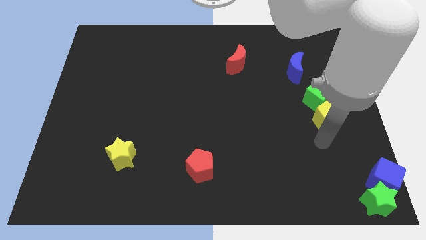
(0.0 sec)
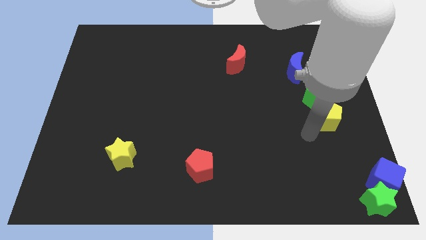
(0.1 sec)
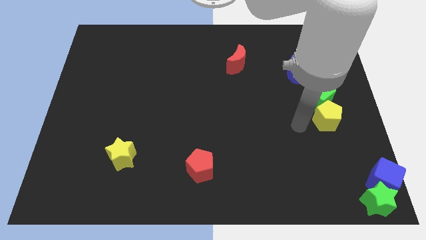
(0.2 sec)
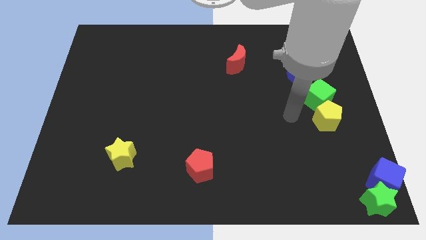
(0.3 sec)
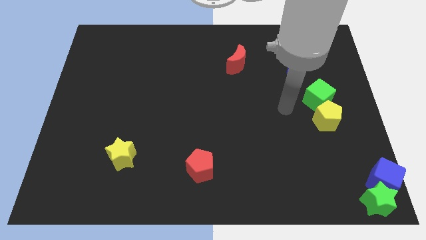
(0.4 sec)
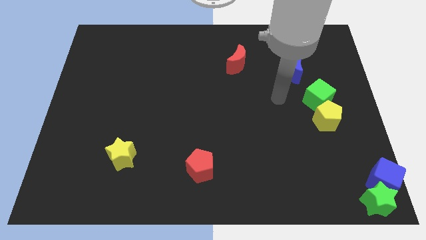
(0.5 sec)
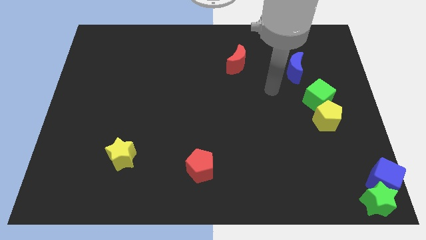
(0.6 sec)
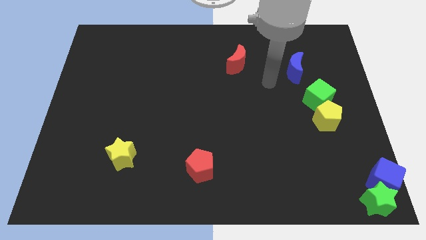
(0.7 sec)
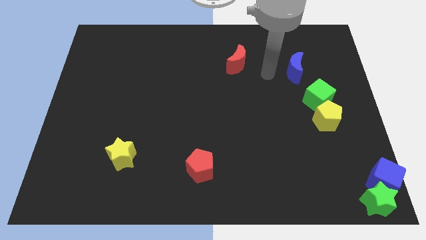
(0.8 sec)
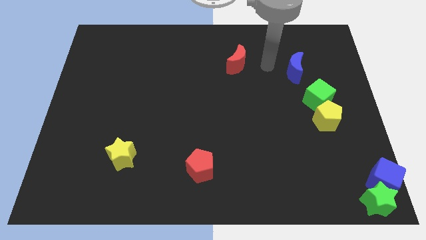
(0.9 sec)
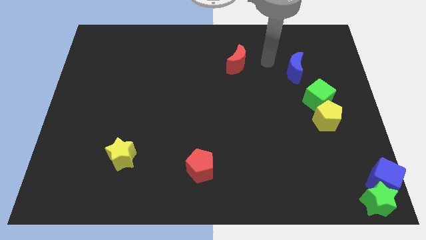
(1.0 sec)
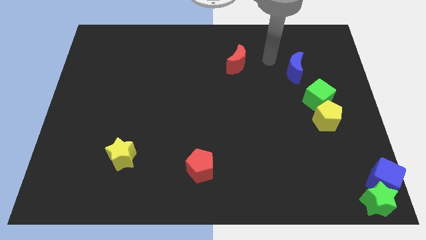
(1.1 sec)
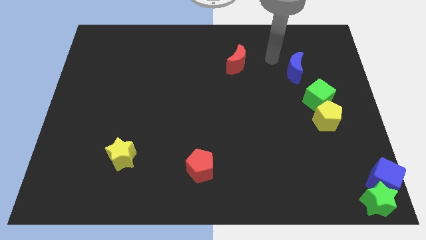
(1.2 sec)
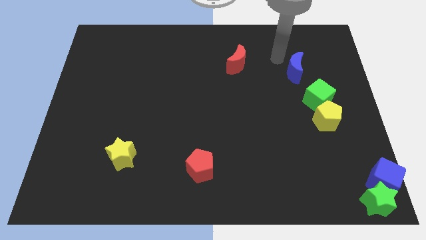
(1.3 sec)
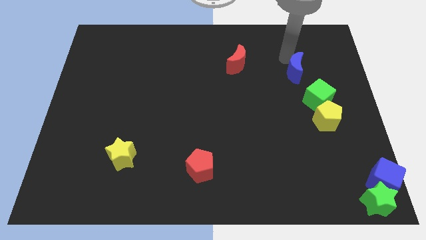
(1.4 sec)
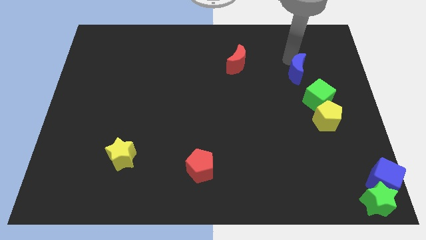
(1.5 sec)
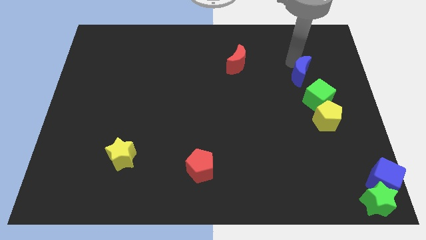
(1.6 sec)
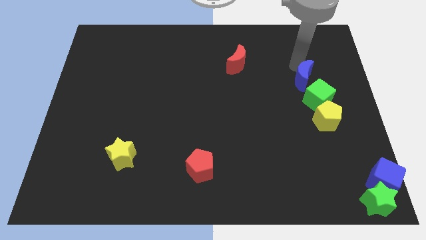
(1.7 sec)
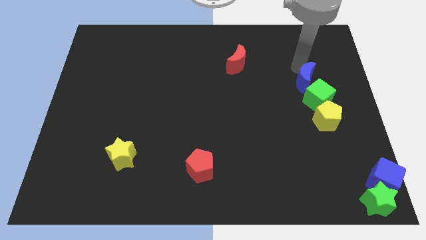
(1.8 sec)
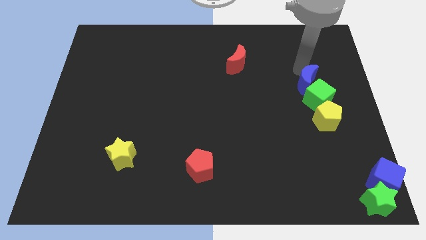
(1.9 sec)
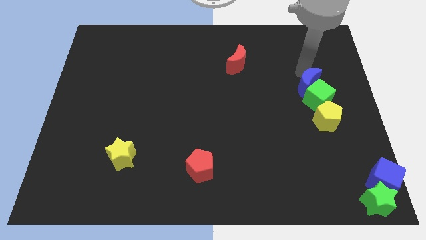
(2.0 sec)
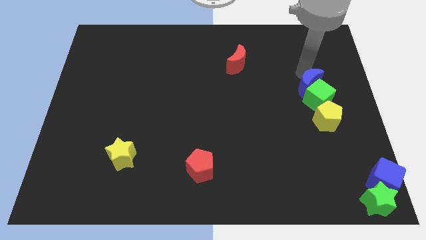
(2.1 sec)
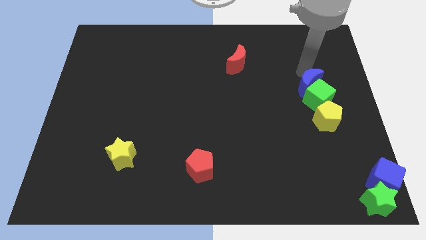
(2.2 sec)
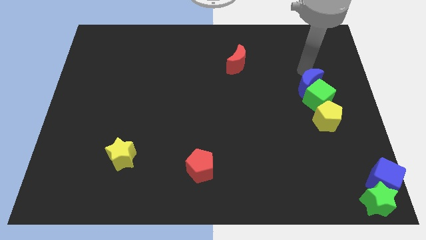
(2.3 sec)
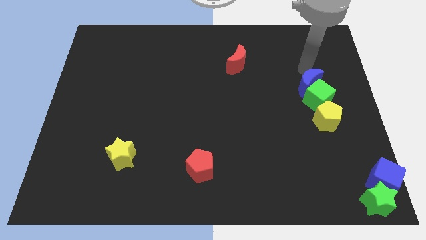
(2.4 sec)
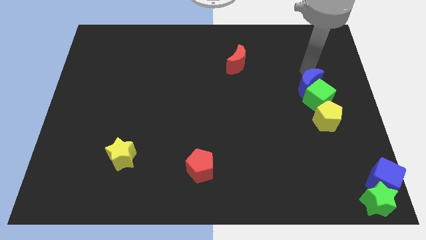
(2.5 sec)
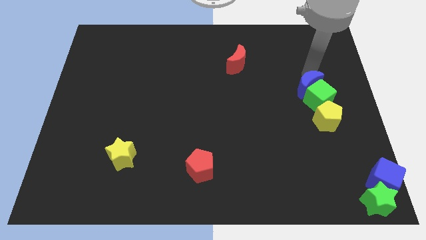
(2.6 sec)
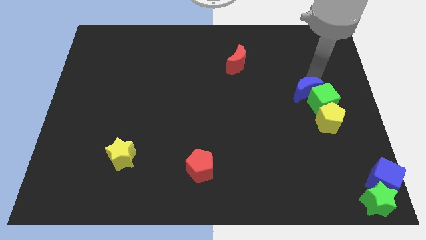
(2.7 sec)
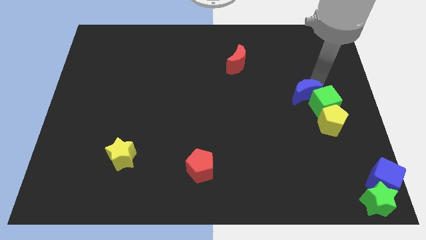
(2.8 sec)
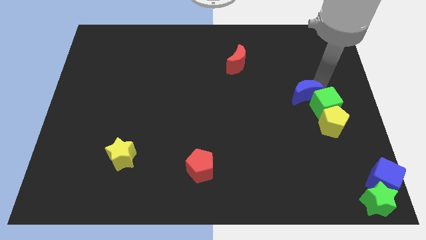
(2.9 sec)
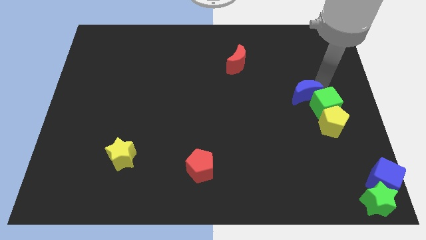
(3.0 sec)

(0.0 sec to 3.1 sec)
push blue moon into green cube

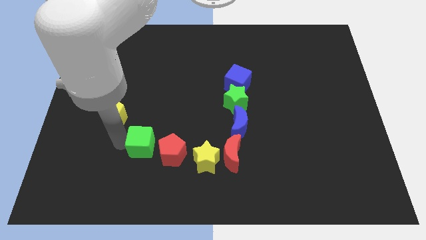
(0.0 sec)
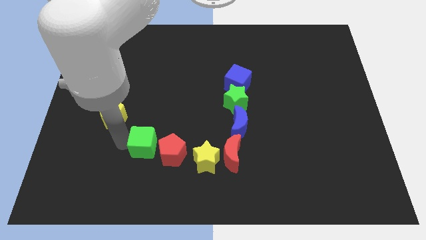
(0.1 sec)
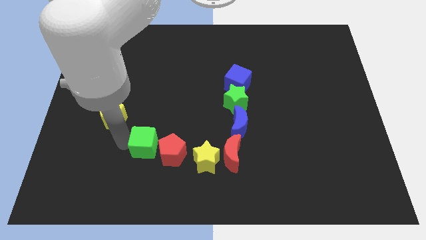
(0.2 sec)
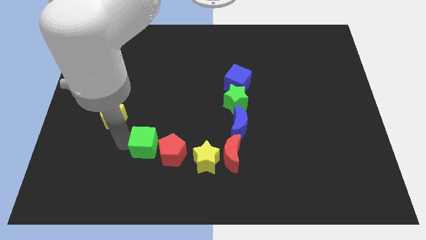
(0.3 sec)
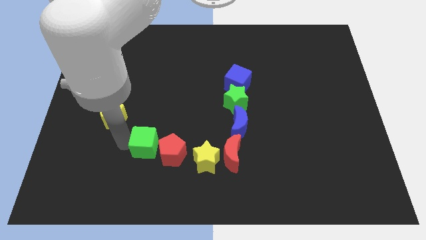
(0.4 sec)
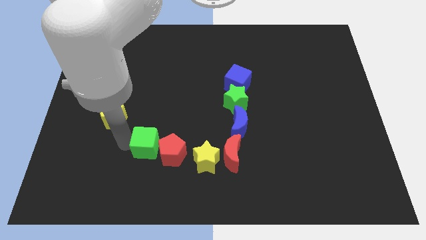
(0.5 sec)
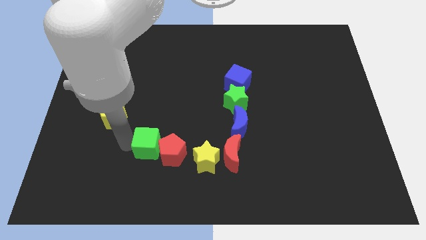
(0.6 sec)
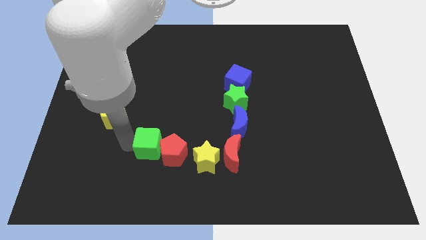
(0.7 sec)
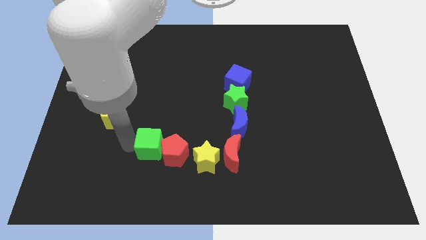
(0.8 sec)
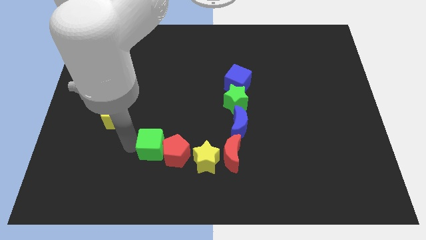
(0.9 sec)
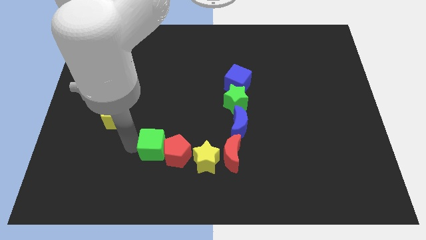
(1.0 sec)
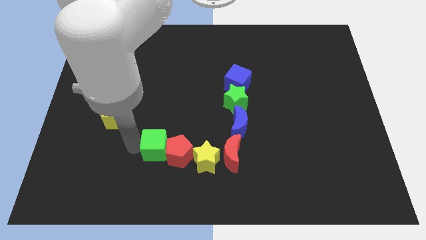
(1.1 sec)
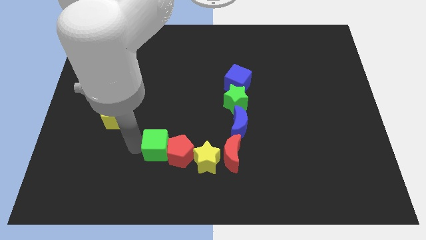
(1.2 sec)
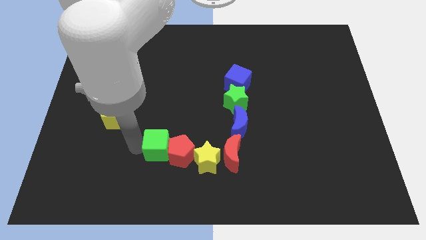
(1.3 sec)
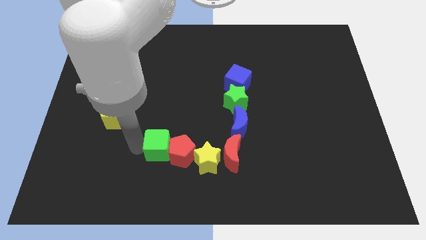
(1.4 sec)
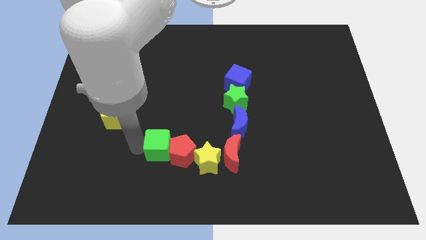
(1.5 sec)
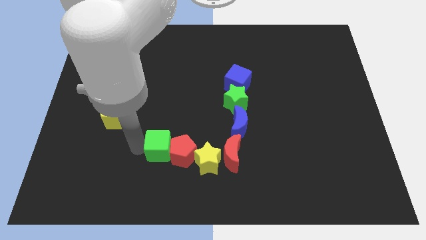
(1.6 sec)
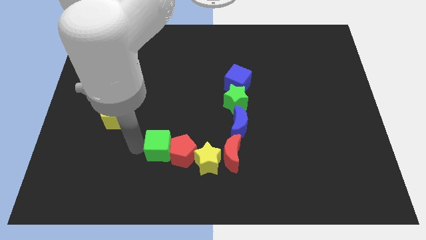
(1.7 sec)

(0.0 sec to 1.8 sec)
move the green cube into the red pentagon

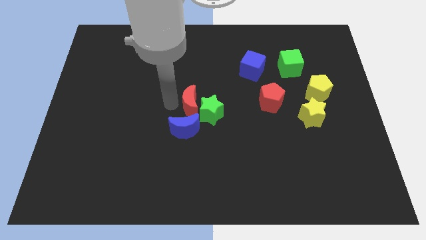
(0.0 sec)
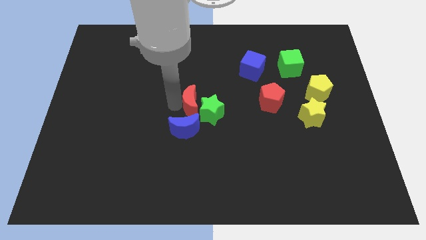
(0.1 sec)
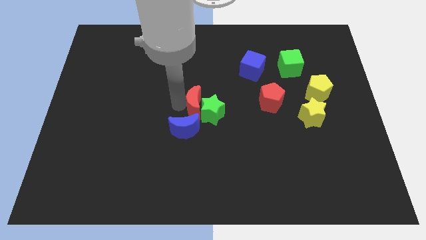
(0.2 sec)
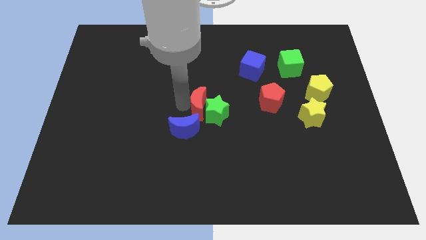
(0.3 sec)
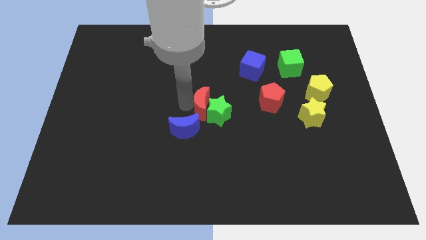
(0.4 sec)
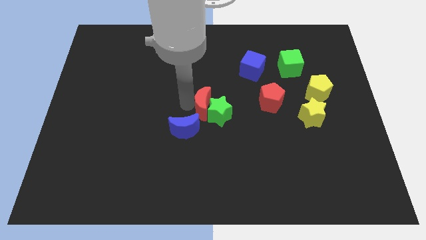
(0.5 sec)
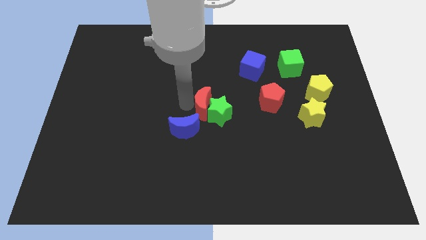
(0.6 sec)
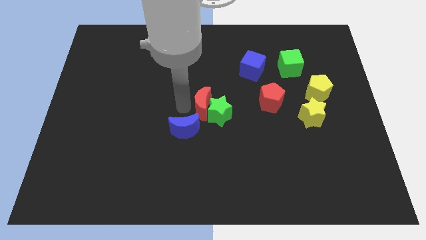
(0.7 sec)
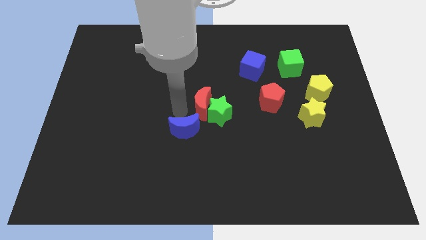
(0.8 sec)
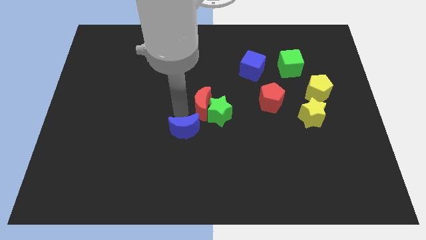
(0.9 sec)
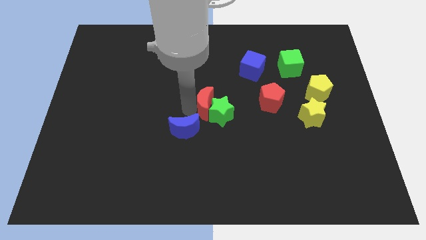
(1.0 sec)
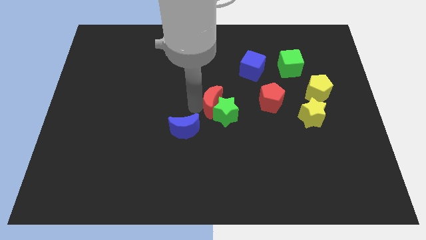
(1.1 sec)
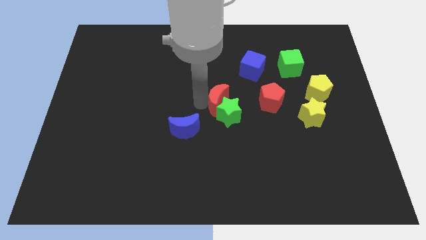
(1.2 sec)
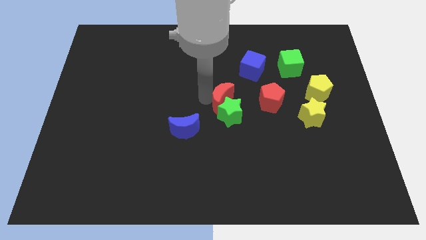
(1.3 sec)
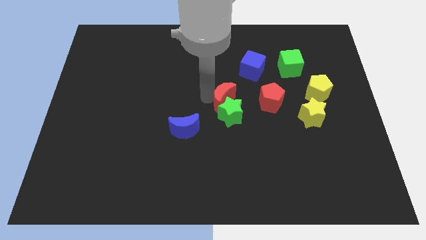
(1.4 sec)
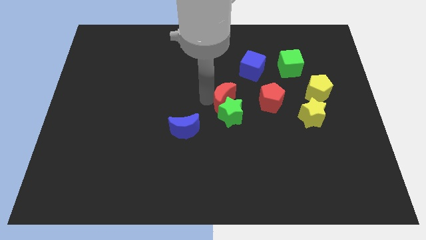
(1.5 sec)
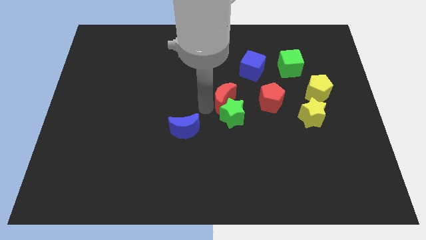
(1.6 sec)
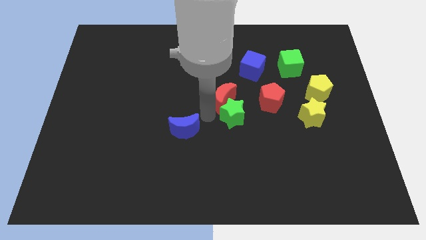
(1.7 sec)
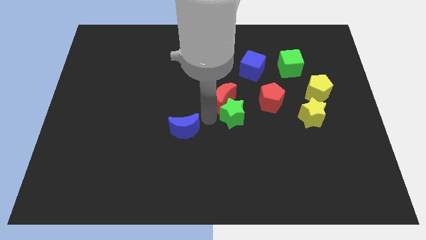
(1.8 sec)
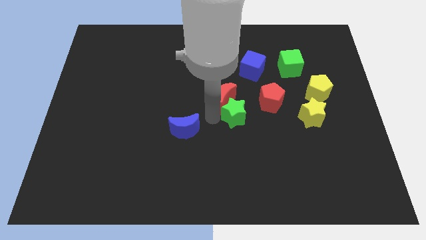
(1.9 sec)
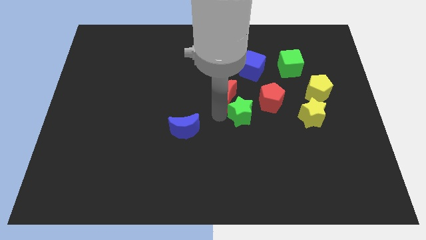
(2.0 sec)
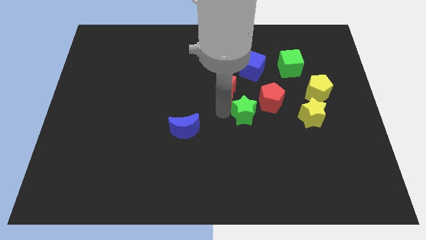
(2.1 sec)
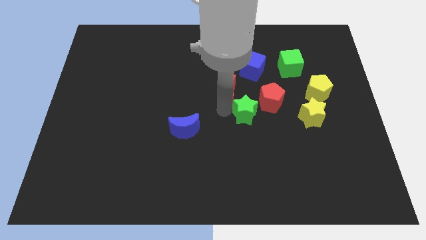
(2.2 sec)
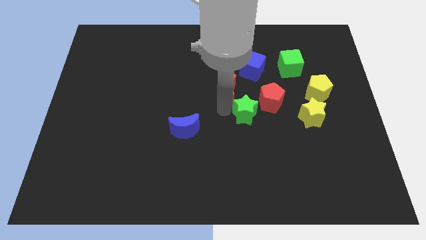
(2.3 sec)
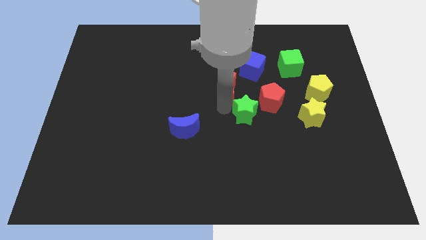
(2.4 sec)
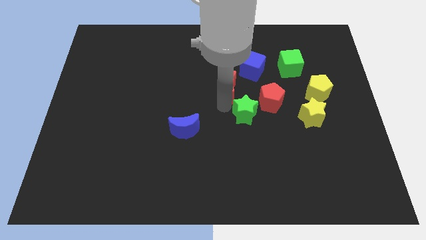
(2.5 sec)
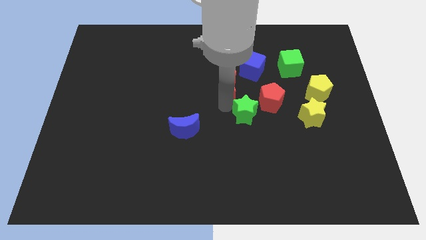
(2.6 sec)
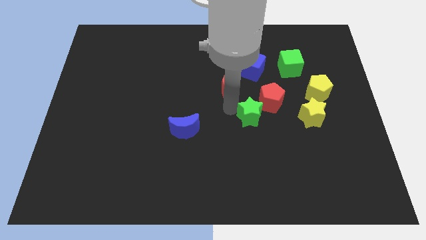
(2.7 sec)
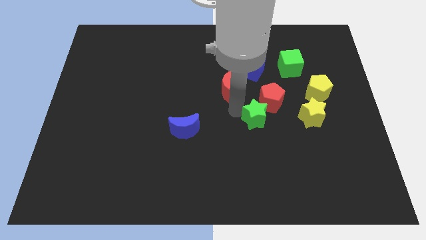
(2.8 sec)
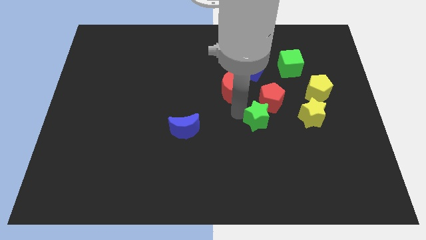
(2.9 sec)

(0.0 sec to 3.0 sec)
push green star below red pentagon

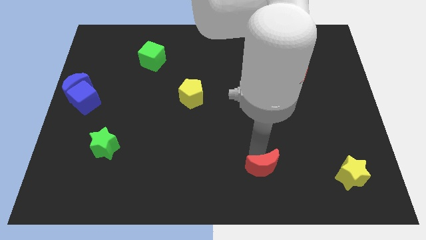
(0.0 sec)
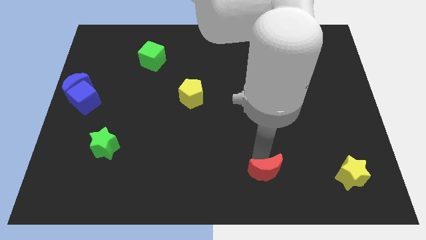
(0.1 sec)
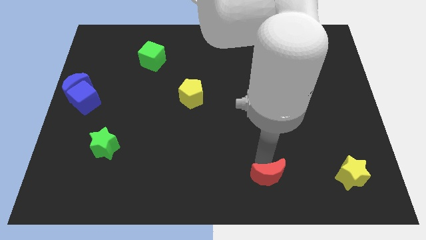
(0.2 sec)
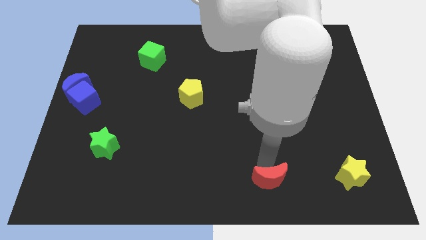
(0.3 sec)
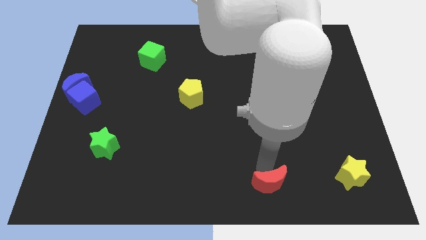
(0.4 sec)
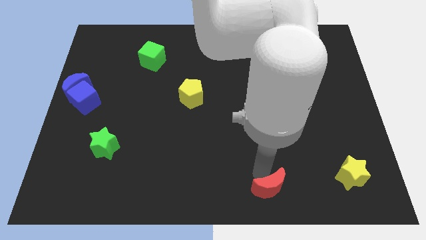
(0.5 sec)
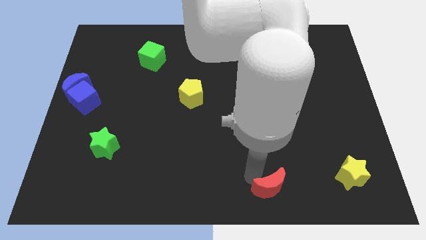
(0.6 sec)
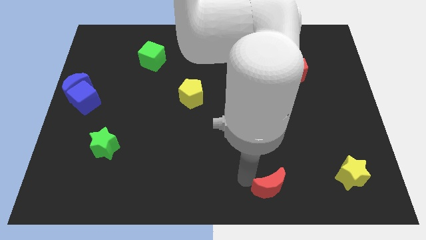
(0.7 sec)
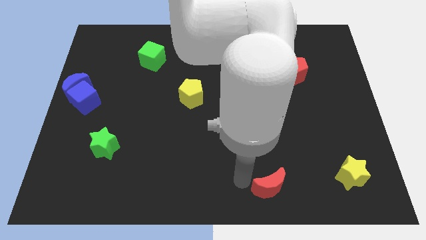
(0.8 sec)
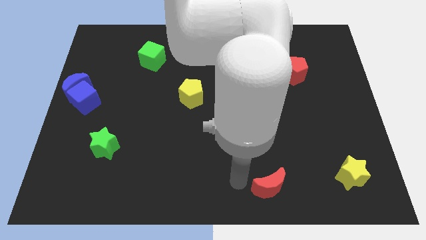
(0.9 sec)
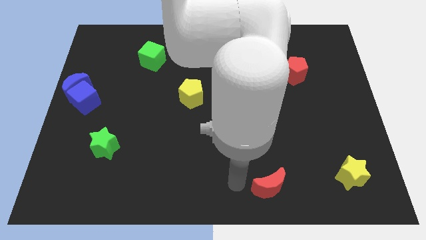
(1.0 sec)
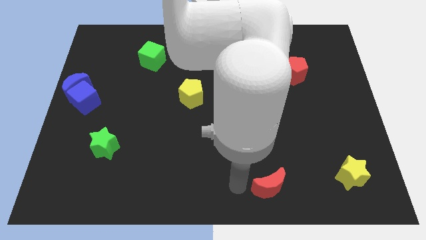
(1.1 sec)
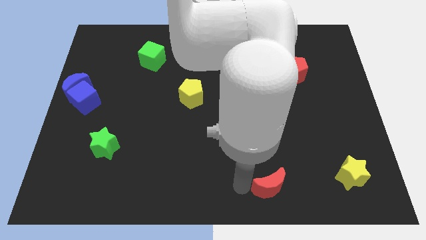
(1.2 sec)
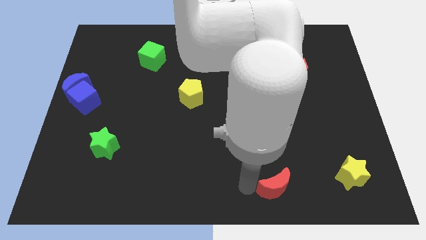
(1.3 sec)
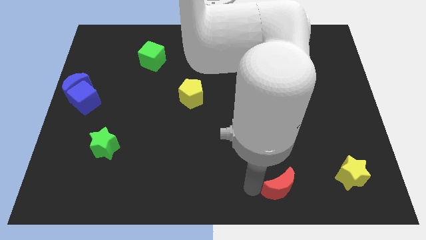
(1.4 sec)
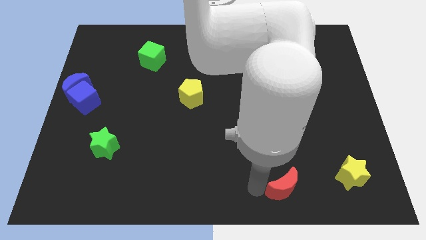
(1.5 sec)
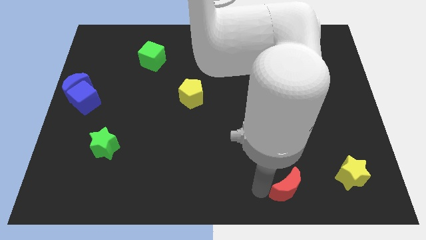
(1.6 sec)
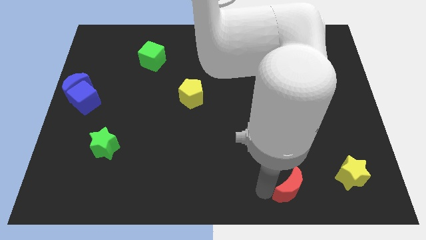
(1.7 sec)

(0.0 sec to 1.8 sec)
place the red moon to the left of the yellow star
